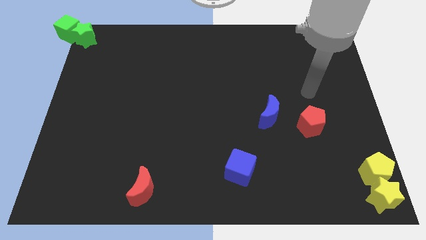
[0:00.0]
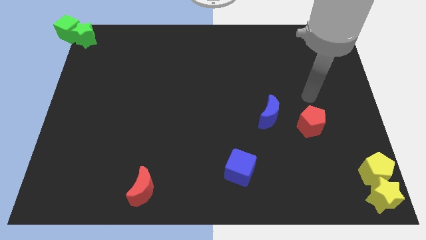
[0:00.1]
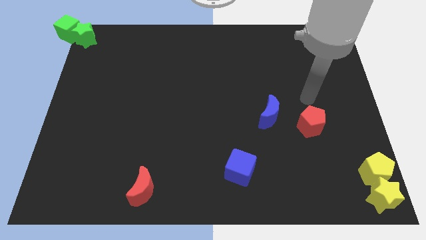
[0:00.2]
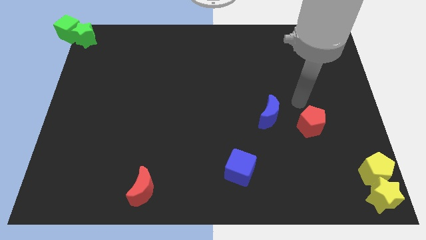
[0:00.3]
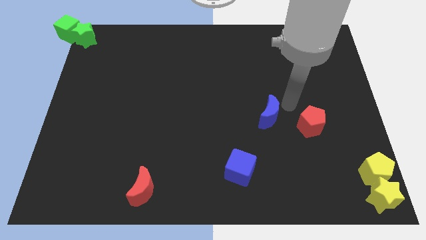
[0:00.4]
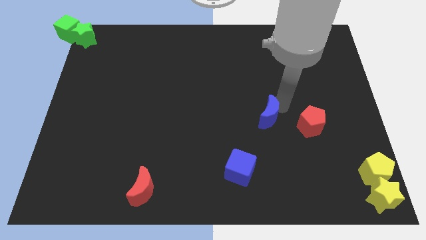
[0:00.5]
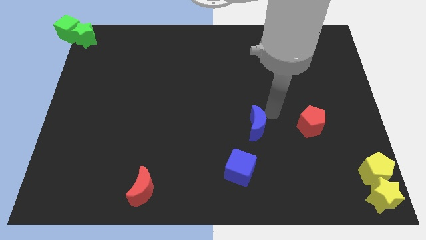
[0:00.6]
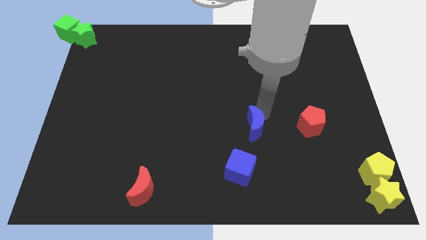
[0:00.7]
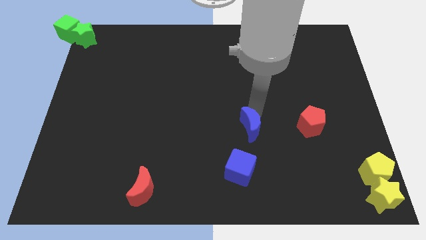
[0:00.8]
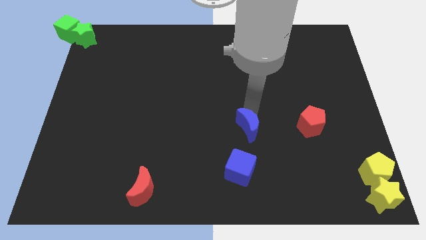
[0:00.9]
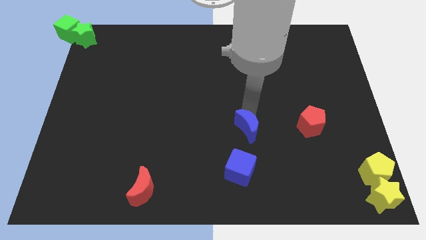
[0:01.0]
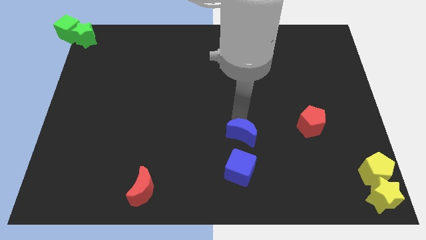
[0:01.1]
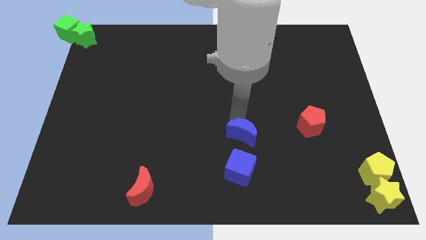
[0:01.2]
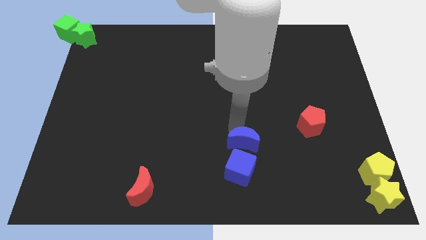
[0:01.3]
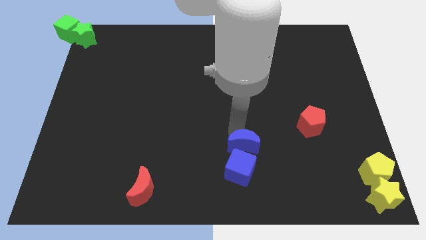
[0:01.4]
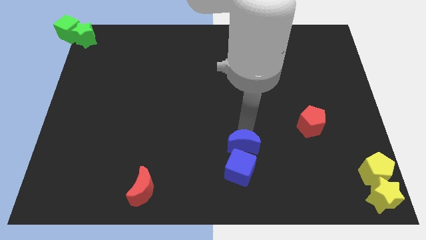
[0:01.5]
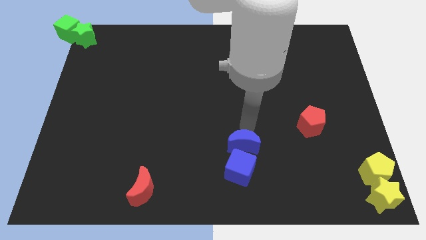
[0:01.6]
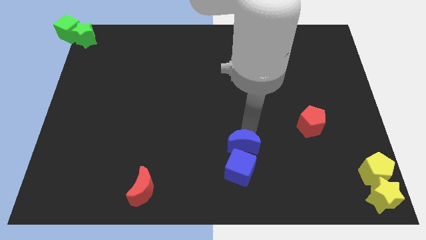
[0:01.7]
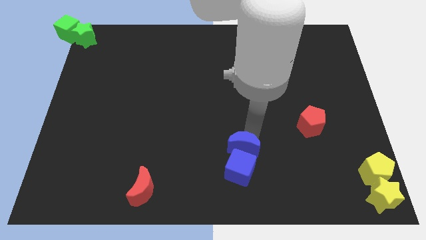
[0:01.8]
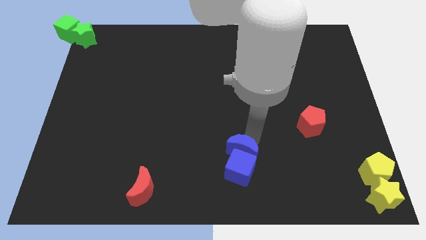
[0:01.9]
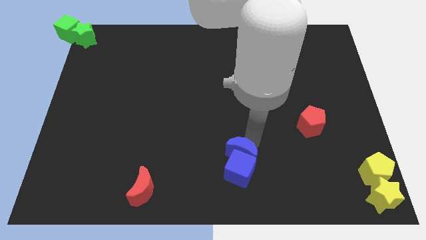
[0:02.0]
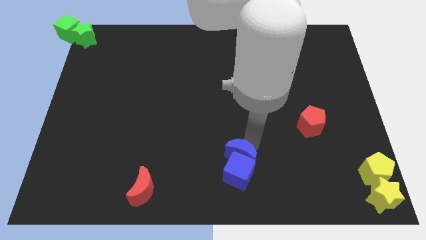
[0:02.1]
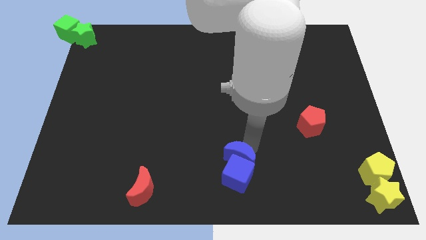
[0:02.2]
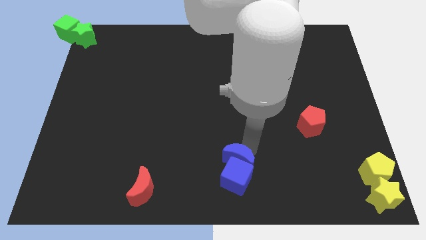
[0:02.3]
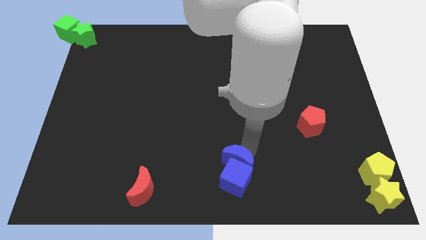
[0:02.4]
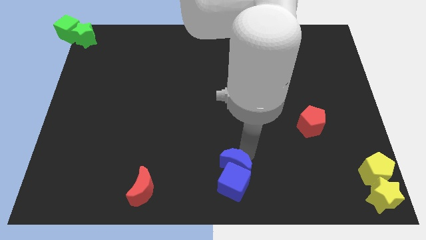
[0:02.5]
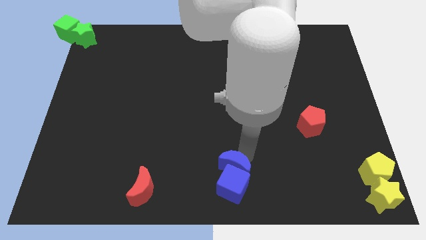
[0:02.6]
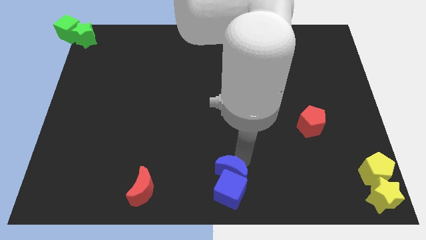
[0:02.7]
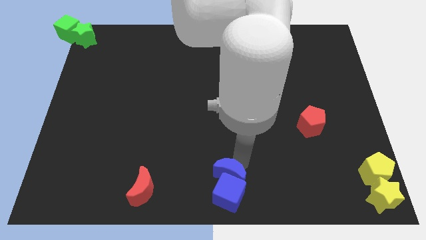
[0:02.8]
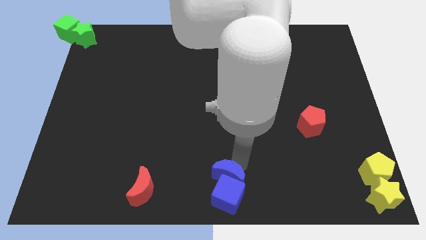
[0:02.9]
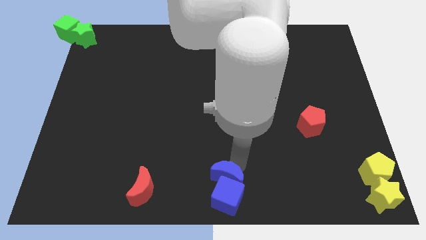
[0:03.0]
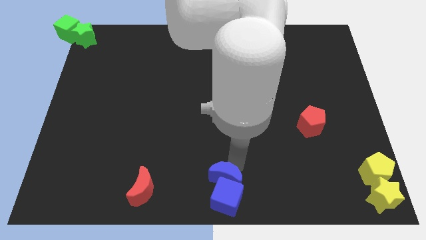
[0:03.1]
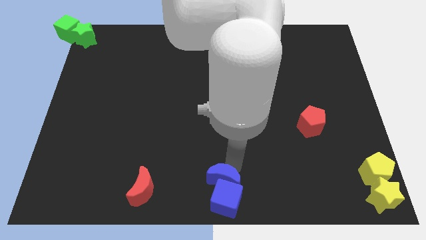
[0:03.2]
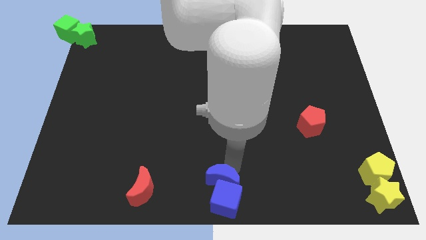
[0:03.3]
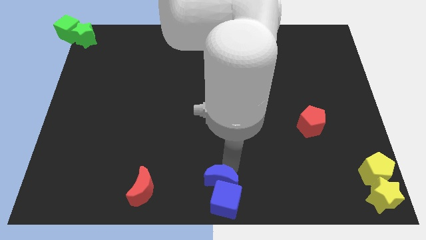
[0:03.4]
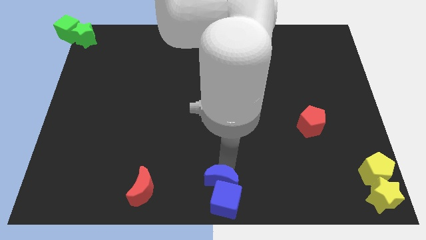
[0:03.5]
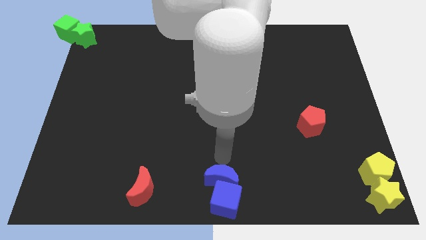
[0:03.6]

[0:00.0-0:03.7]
put the blue blocks at the bottom center of the board

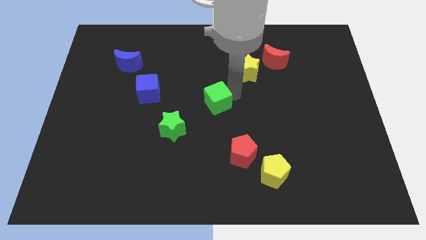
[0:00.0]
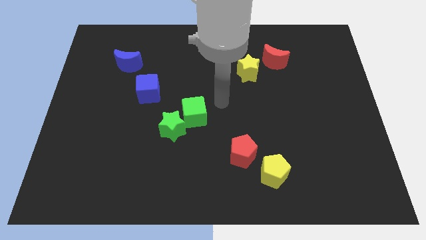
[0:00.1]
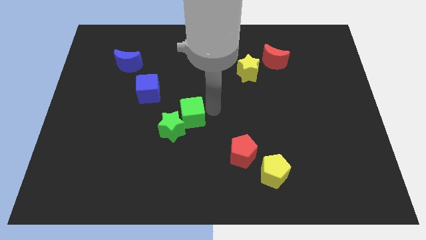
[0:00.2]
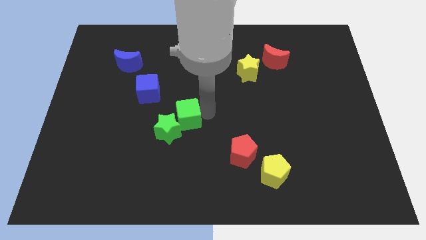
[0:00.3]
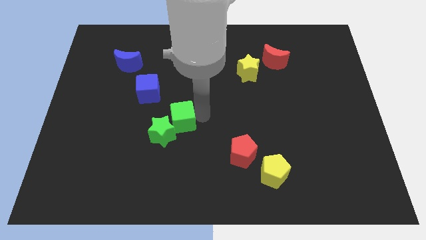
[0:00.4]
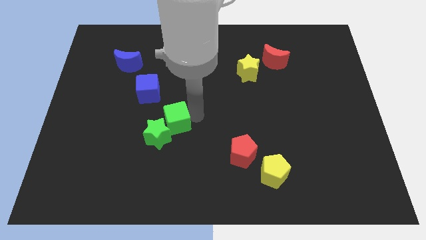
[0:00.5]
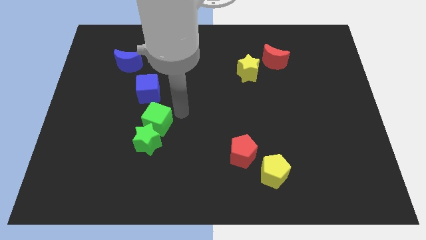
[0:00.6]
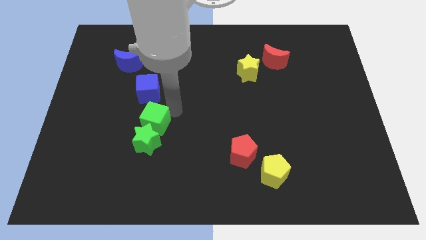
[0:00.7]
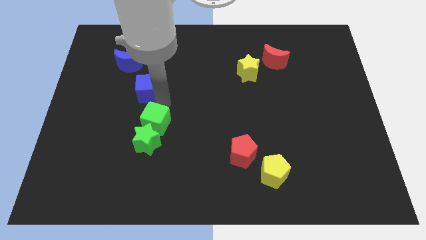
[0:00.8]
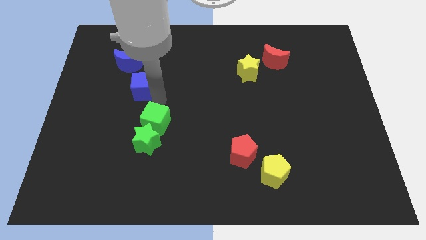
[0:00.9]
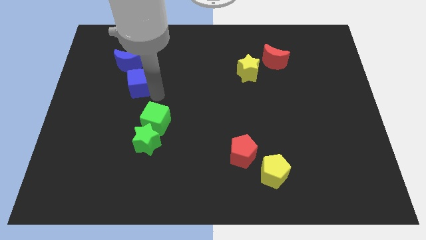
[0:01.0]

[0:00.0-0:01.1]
push the green cube into green star

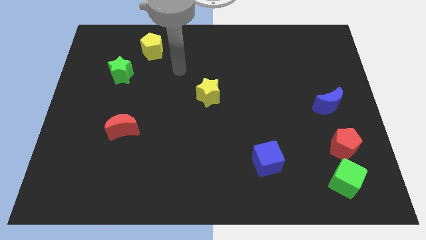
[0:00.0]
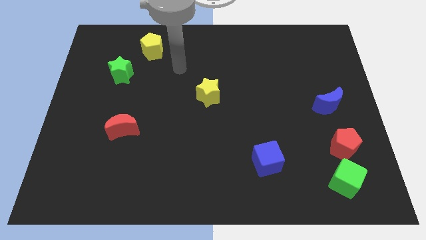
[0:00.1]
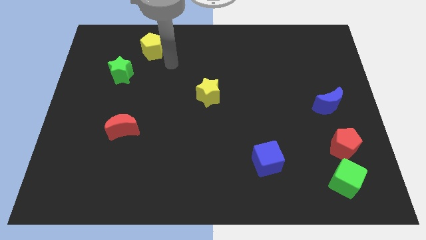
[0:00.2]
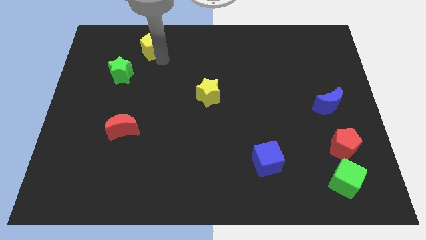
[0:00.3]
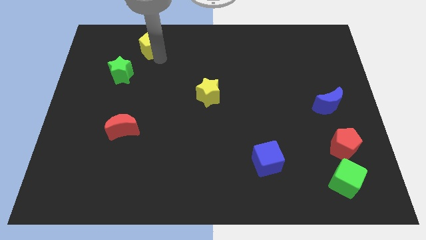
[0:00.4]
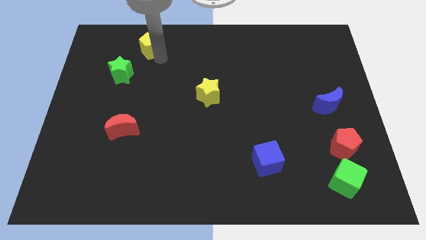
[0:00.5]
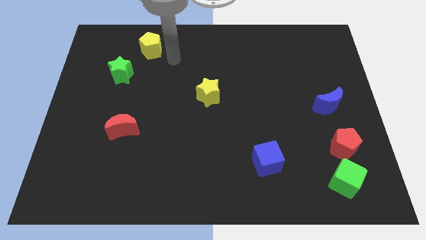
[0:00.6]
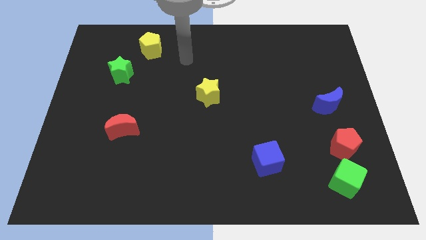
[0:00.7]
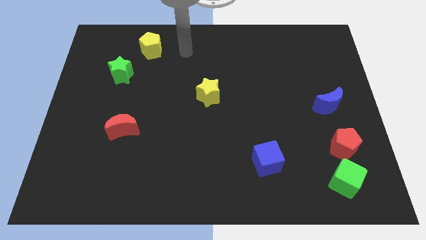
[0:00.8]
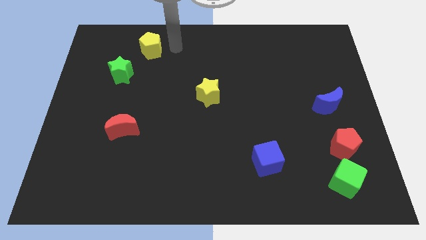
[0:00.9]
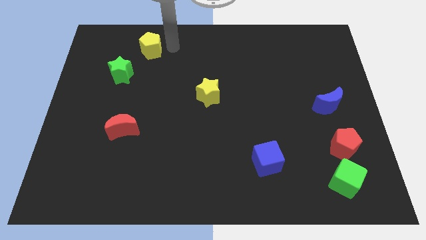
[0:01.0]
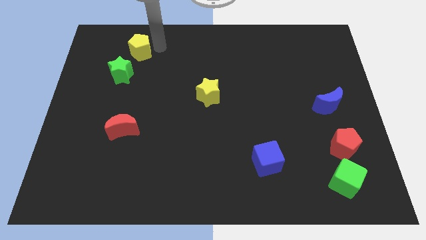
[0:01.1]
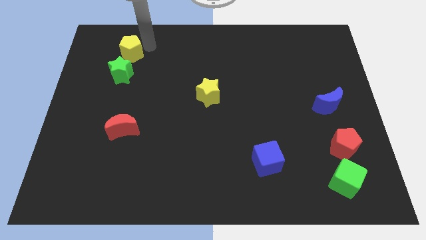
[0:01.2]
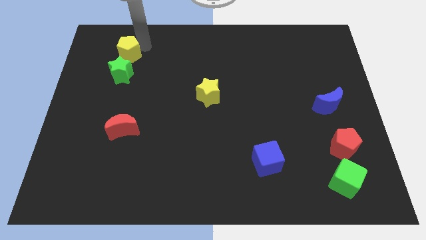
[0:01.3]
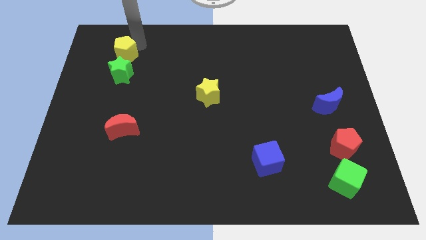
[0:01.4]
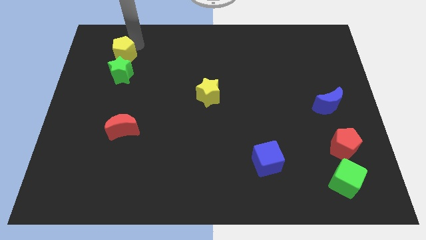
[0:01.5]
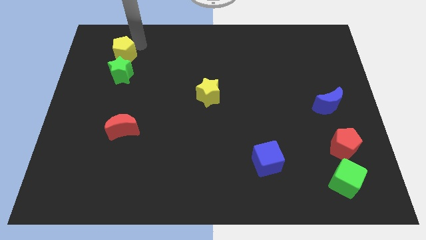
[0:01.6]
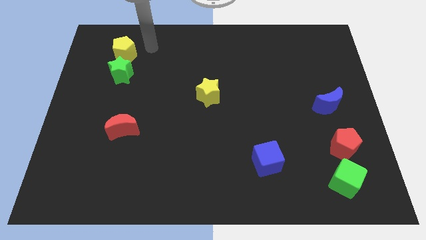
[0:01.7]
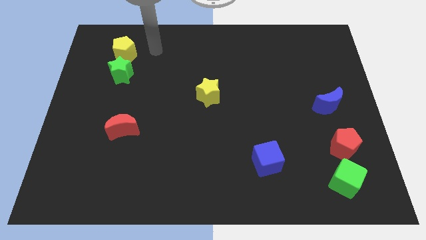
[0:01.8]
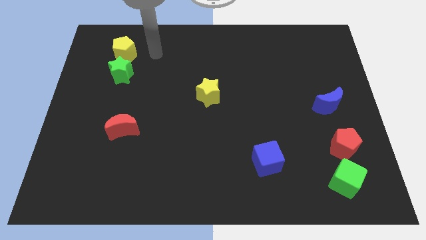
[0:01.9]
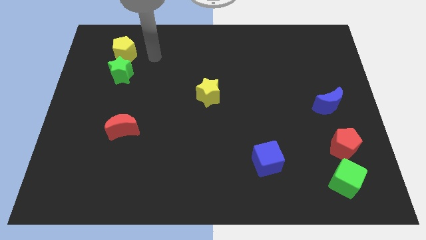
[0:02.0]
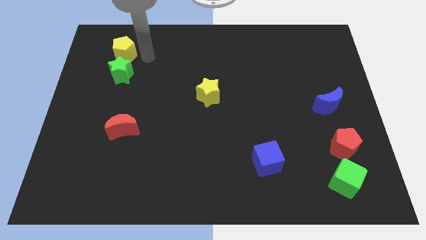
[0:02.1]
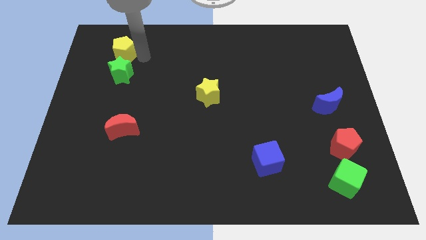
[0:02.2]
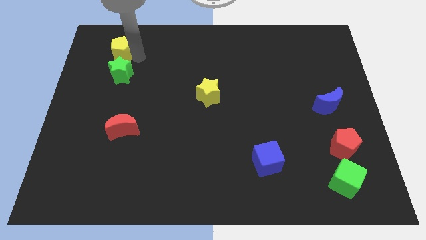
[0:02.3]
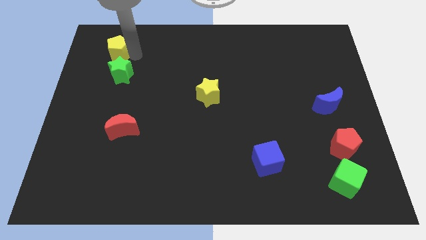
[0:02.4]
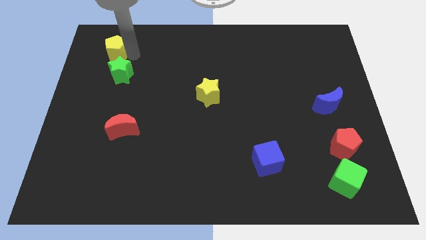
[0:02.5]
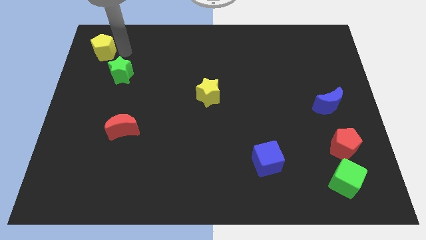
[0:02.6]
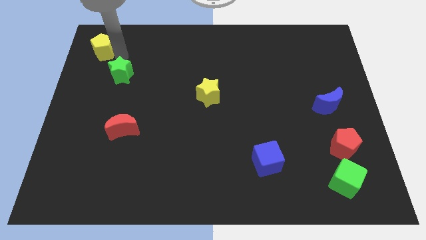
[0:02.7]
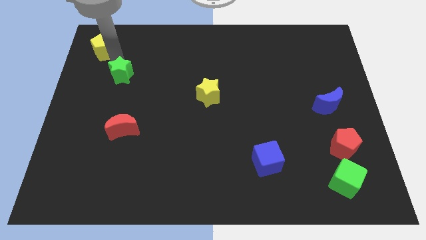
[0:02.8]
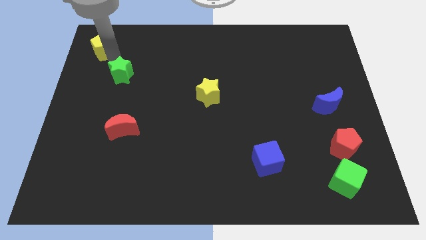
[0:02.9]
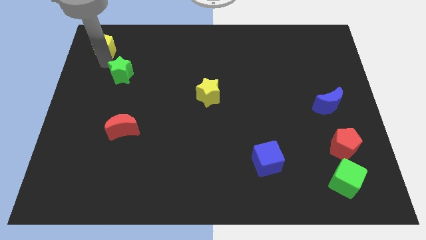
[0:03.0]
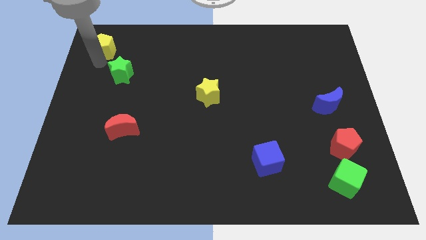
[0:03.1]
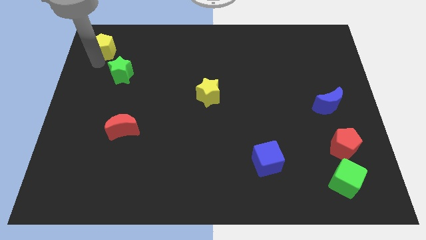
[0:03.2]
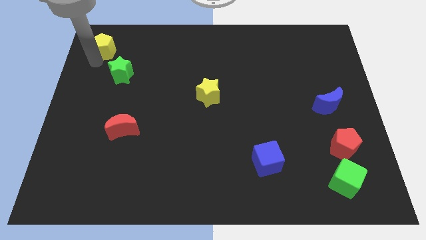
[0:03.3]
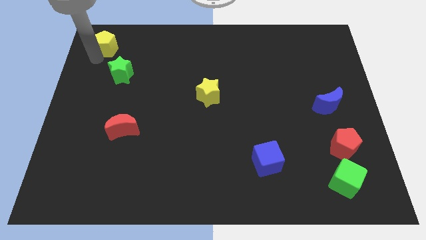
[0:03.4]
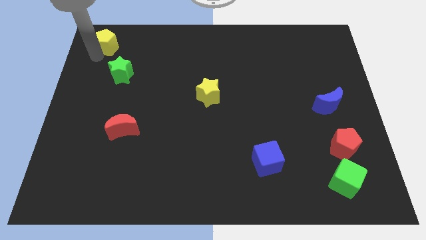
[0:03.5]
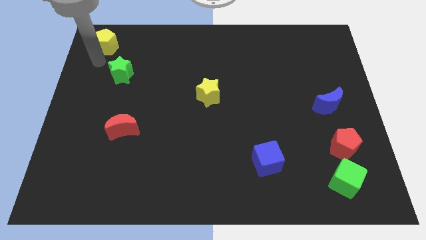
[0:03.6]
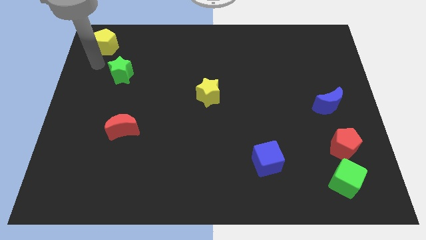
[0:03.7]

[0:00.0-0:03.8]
place the yellow pentagon diagonally to the left side of the green star

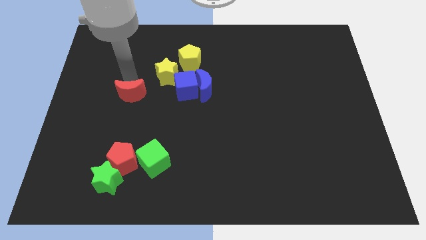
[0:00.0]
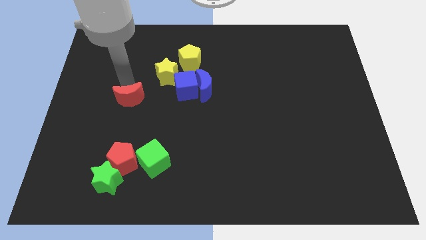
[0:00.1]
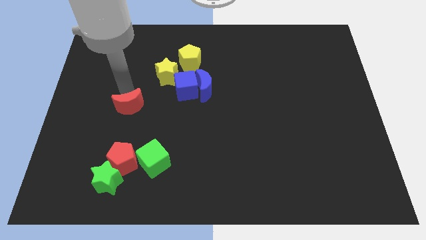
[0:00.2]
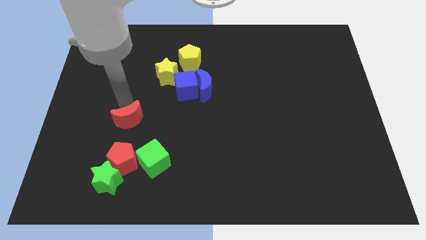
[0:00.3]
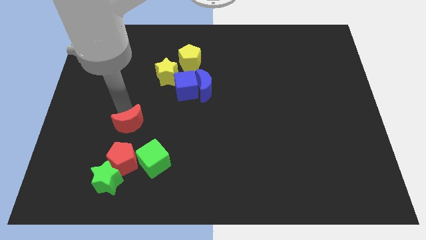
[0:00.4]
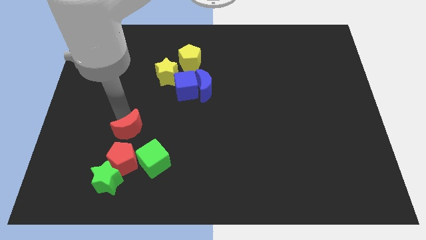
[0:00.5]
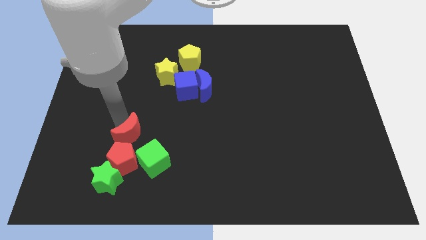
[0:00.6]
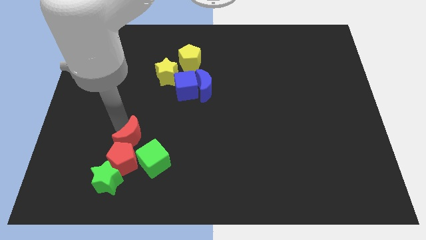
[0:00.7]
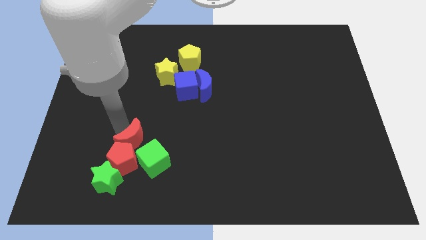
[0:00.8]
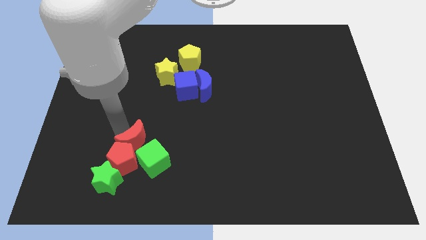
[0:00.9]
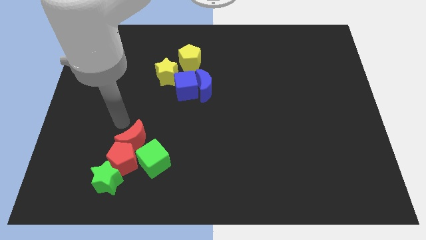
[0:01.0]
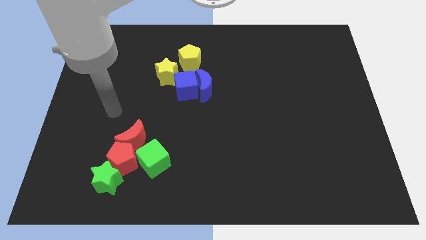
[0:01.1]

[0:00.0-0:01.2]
place red moon above the red pentagon
